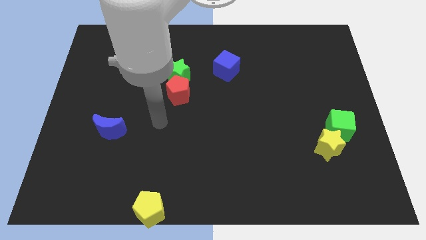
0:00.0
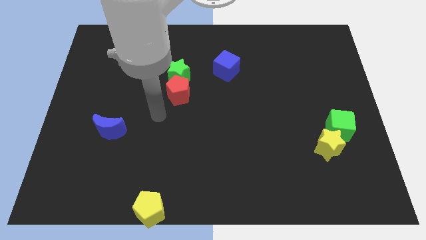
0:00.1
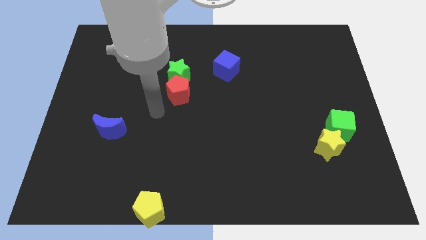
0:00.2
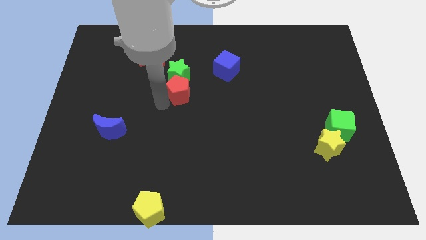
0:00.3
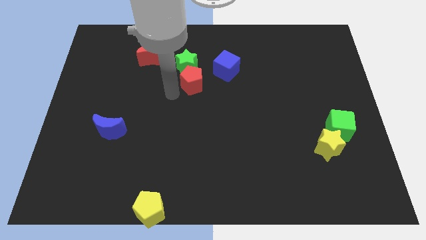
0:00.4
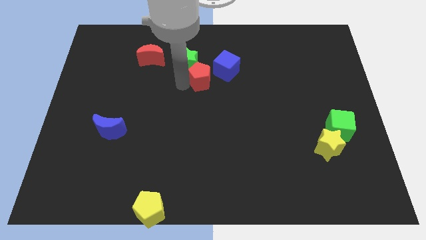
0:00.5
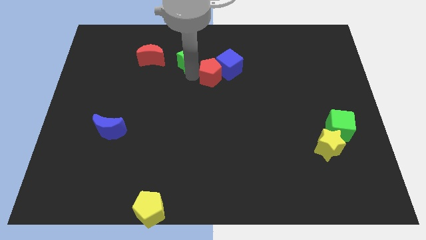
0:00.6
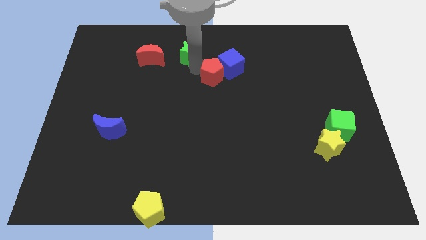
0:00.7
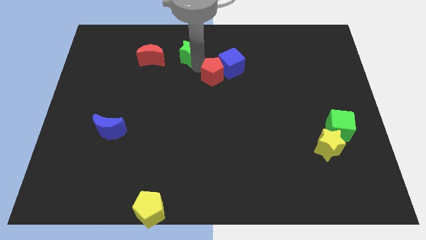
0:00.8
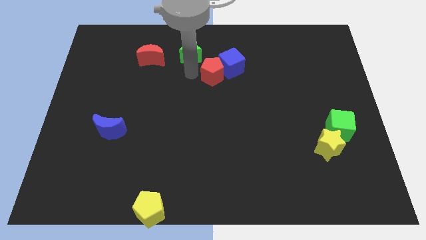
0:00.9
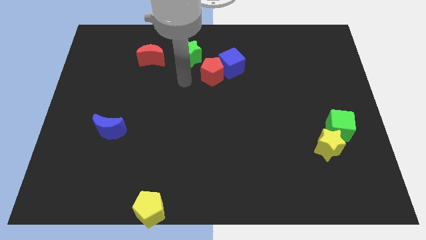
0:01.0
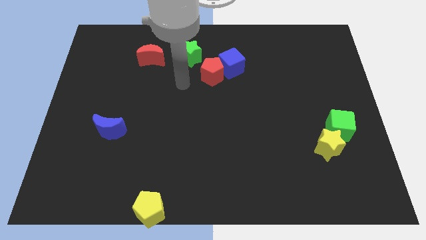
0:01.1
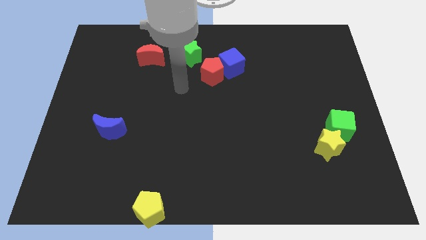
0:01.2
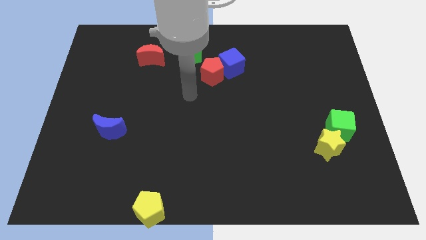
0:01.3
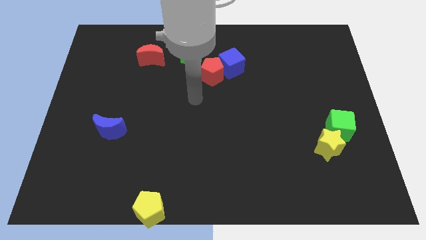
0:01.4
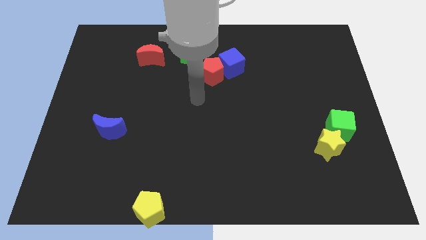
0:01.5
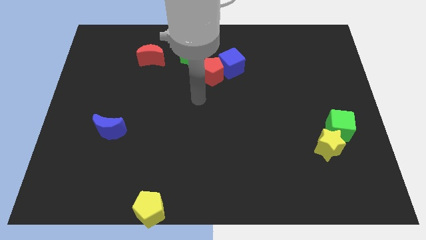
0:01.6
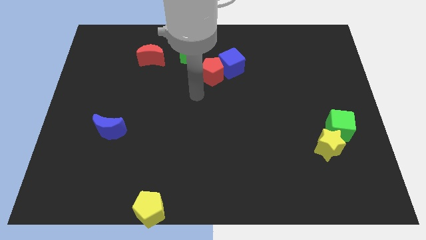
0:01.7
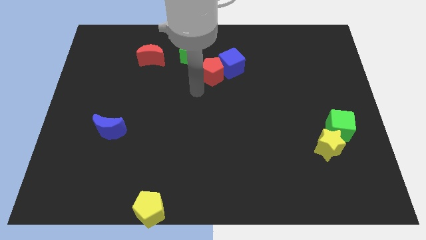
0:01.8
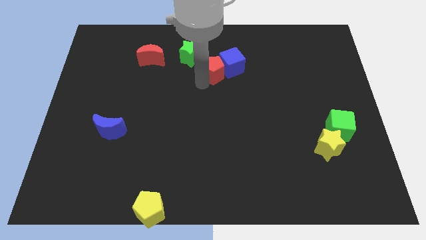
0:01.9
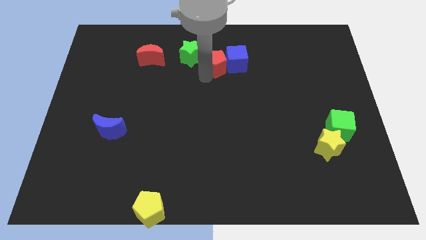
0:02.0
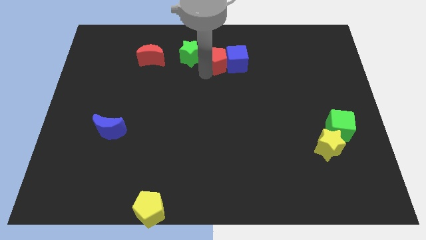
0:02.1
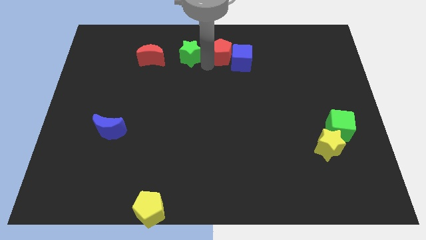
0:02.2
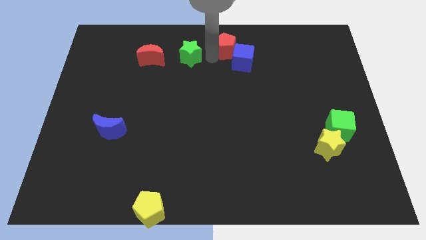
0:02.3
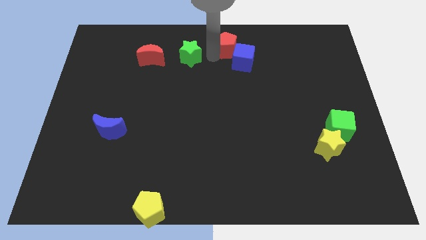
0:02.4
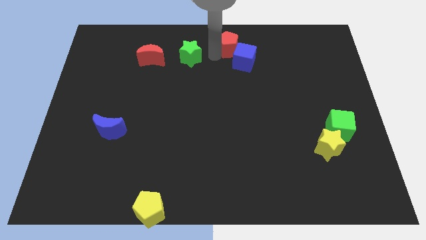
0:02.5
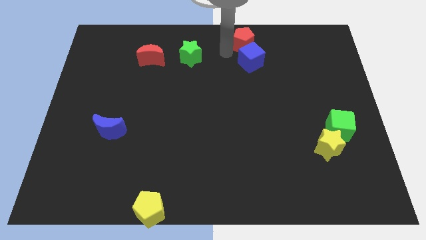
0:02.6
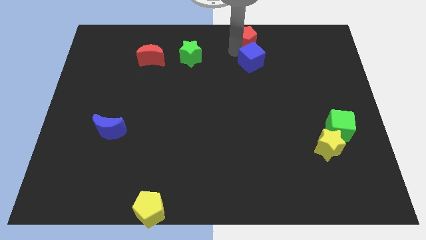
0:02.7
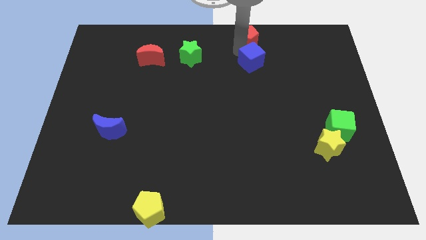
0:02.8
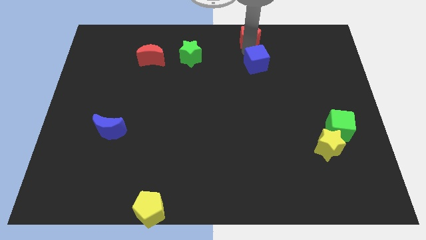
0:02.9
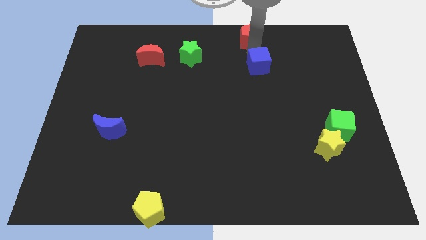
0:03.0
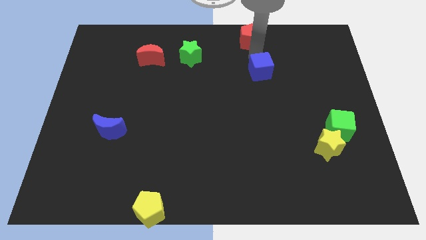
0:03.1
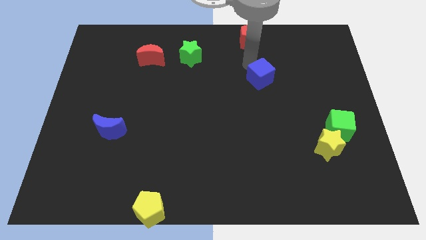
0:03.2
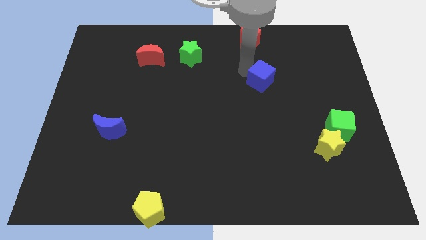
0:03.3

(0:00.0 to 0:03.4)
separate the red pentagon and blue cube

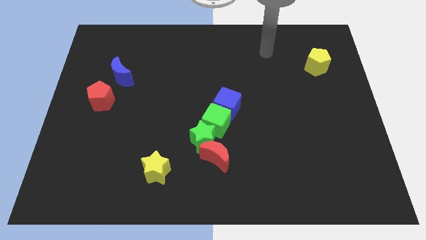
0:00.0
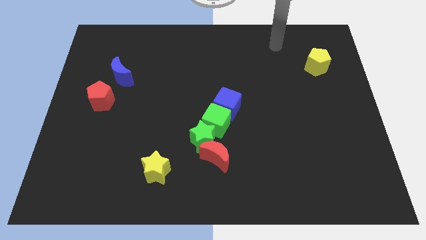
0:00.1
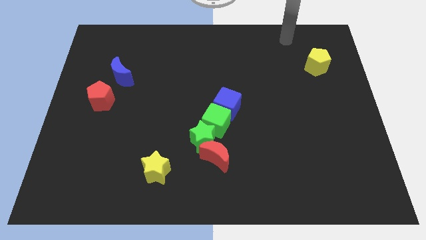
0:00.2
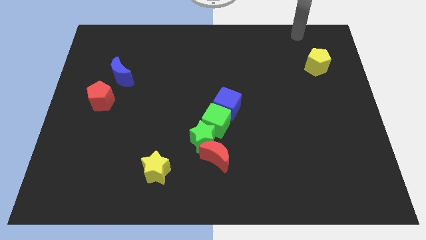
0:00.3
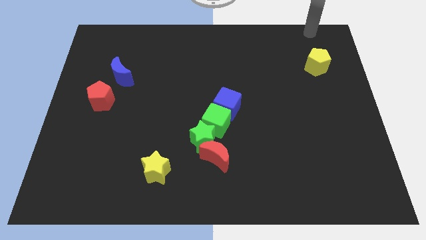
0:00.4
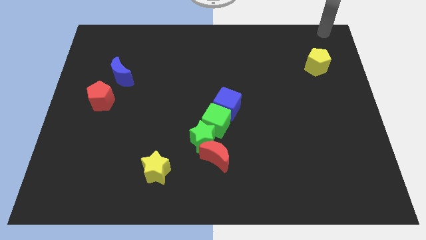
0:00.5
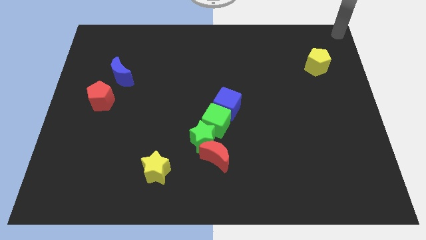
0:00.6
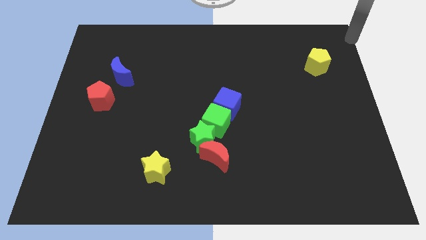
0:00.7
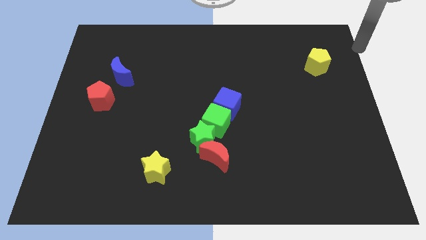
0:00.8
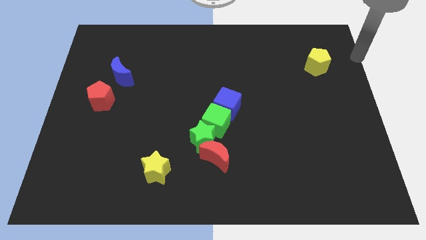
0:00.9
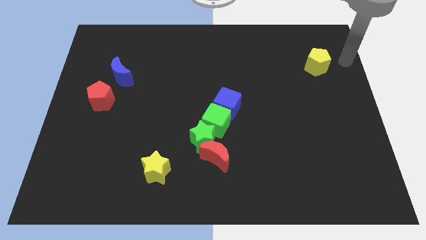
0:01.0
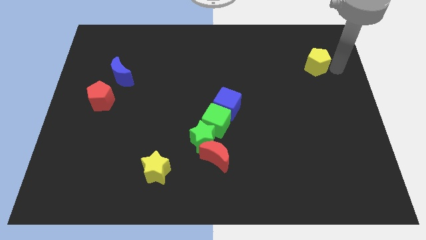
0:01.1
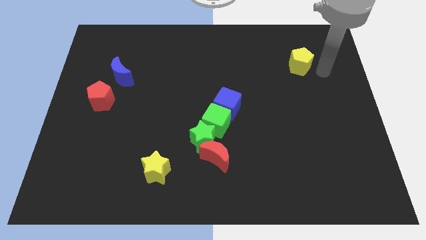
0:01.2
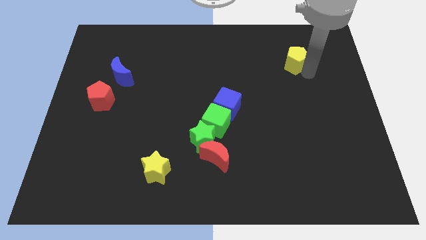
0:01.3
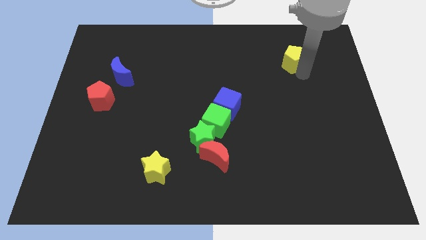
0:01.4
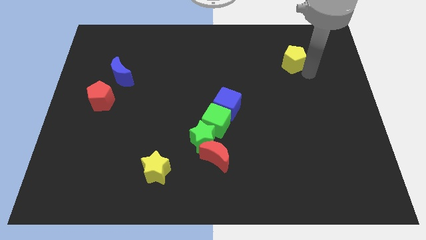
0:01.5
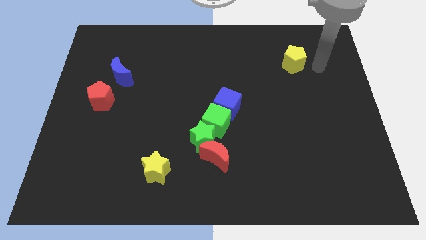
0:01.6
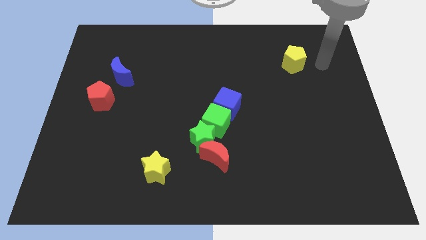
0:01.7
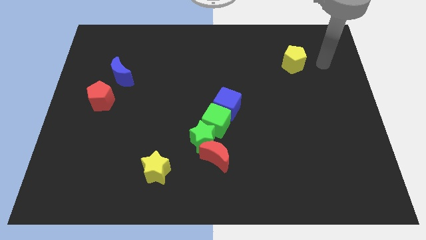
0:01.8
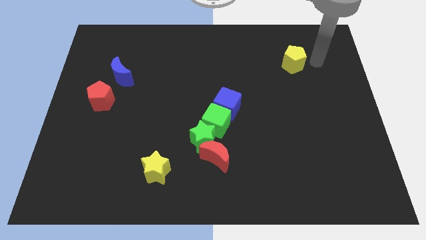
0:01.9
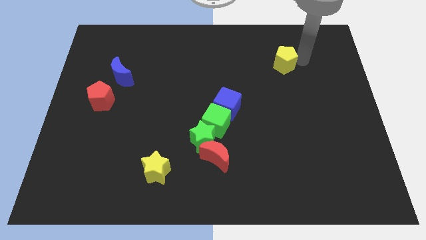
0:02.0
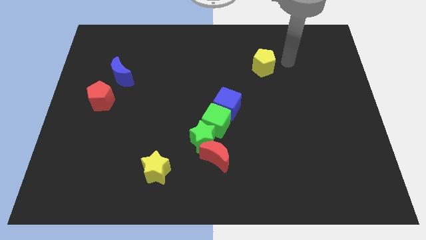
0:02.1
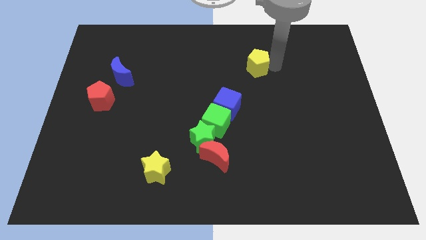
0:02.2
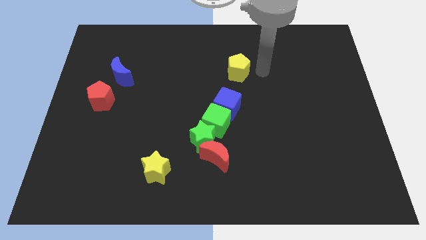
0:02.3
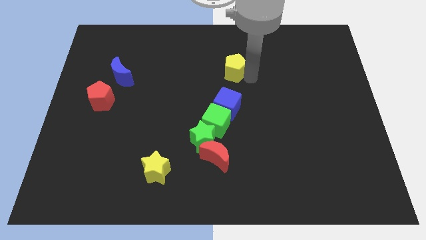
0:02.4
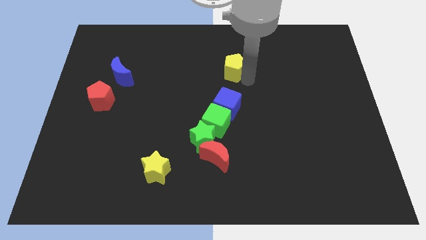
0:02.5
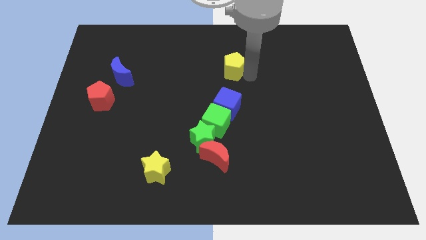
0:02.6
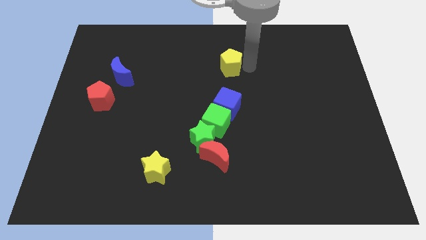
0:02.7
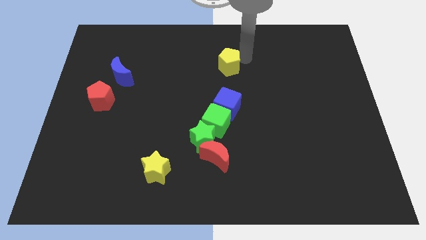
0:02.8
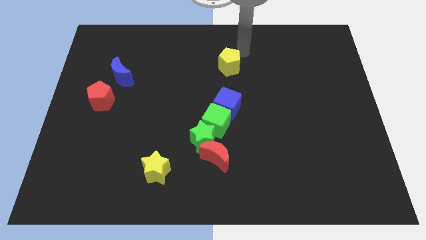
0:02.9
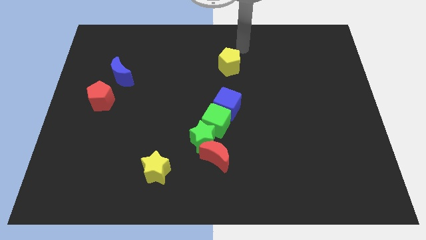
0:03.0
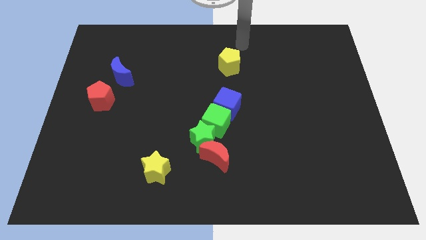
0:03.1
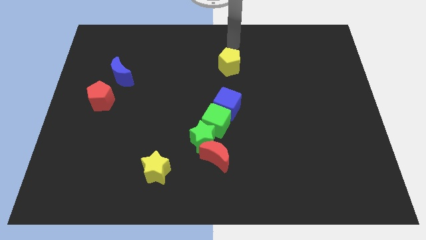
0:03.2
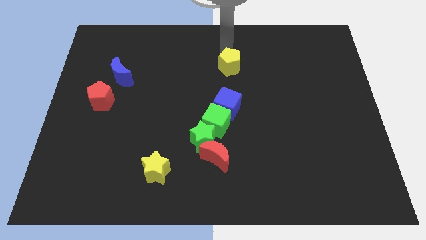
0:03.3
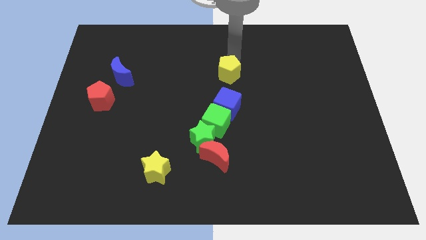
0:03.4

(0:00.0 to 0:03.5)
slightly move the yellow pentagon to the vertical line

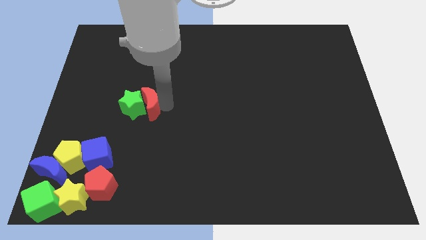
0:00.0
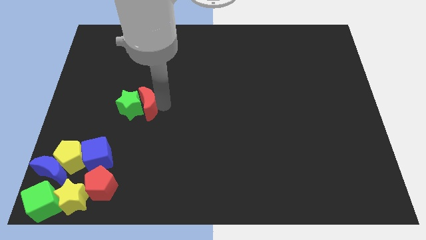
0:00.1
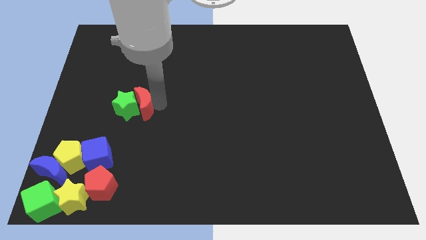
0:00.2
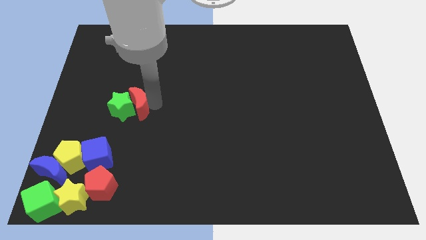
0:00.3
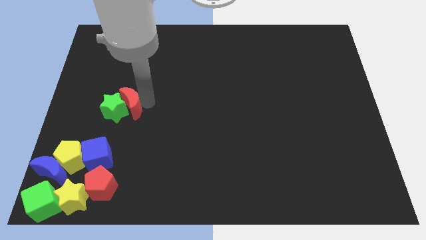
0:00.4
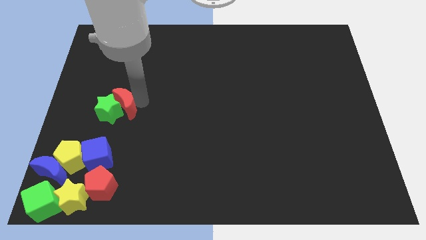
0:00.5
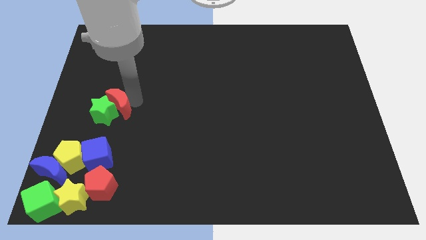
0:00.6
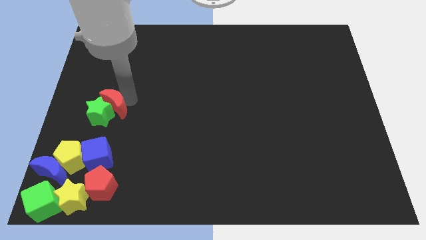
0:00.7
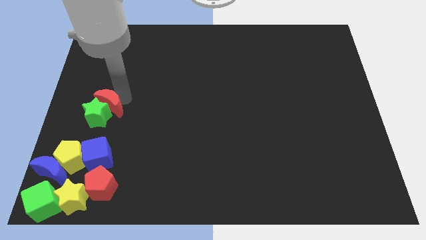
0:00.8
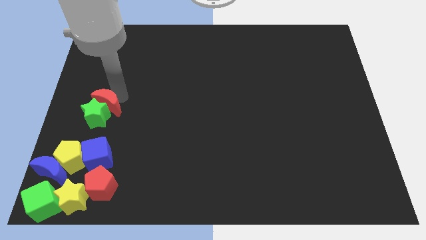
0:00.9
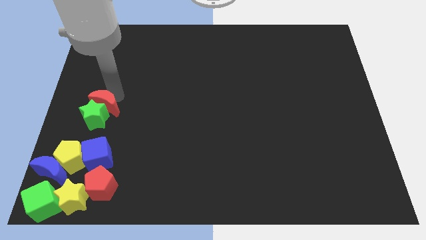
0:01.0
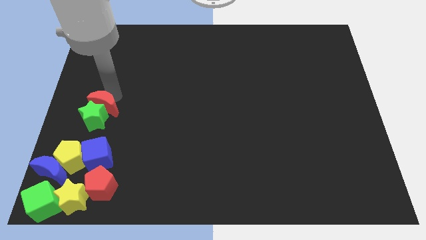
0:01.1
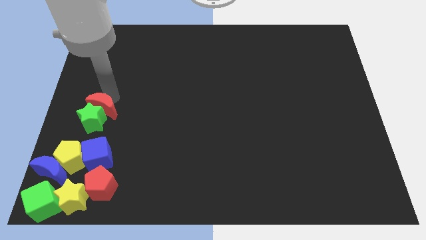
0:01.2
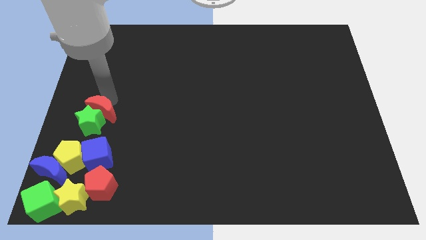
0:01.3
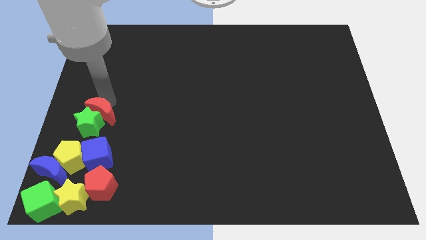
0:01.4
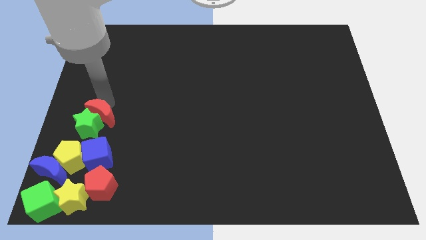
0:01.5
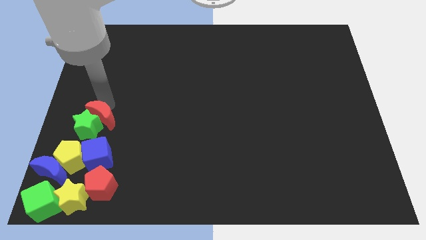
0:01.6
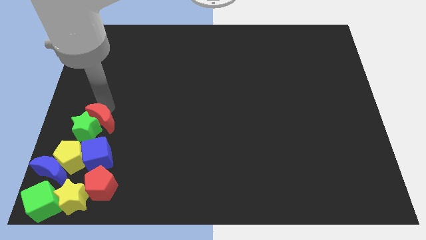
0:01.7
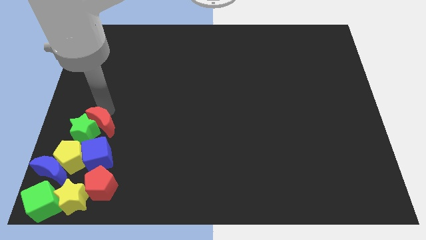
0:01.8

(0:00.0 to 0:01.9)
push both the red moon and green star towards the yellow pentagon
